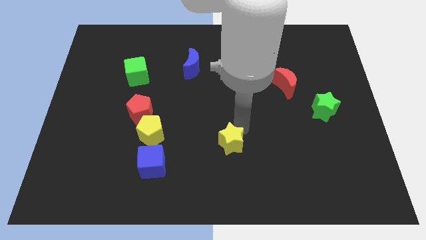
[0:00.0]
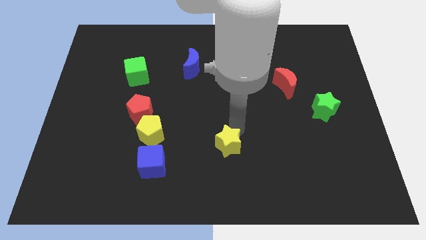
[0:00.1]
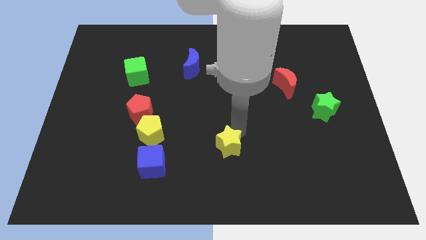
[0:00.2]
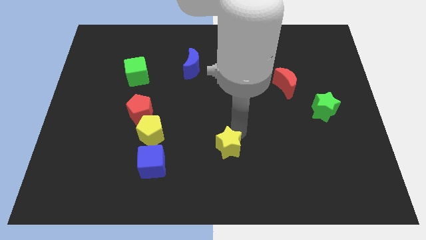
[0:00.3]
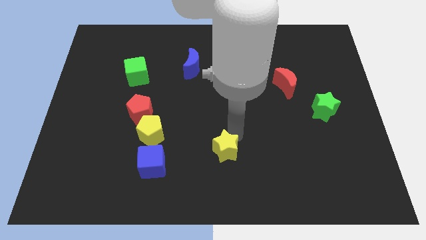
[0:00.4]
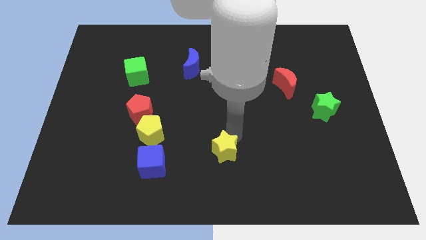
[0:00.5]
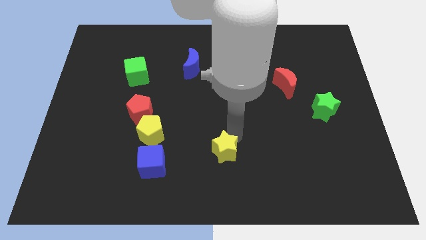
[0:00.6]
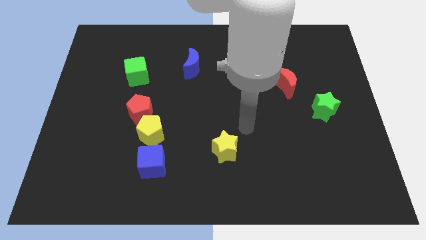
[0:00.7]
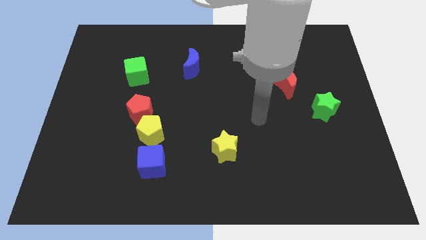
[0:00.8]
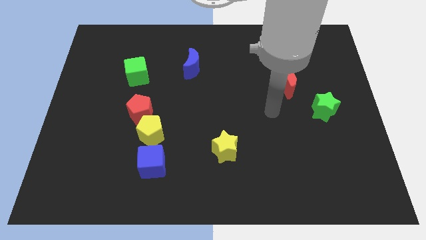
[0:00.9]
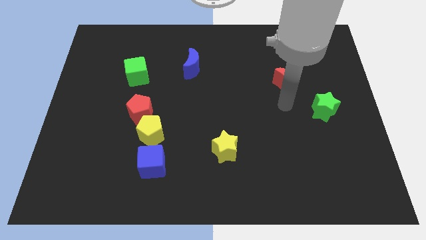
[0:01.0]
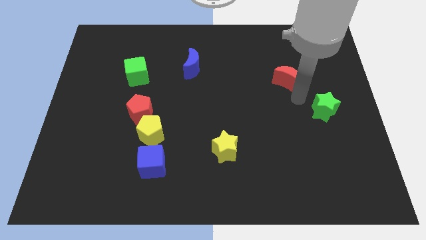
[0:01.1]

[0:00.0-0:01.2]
slightly push the yellow star downward

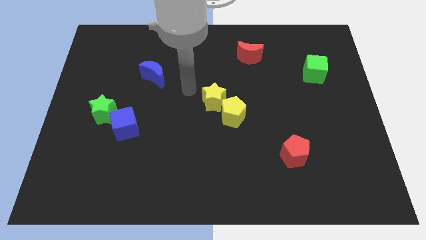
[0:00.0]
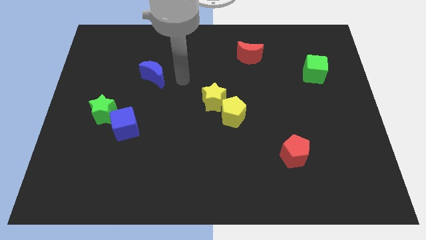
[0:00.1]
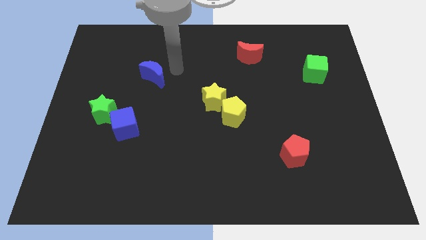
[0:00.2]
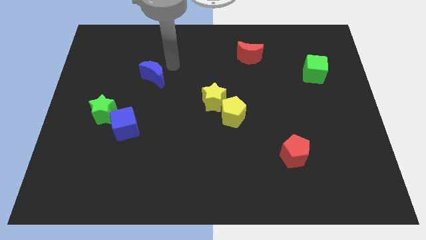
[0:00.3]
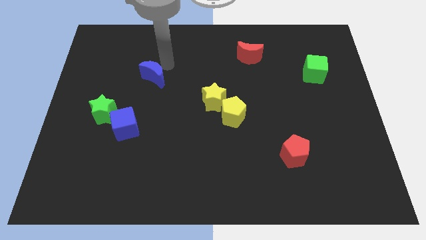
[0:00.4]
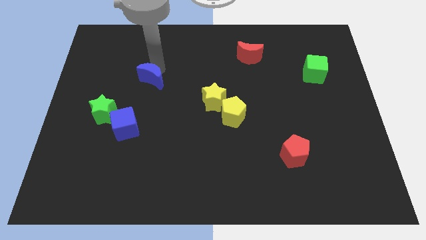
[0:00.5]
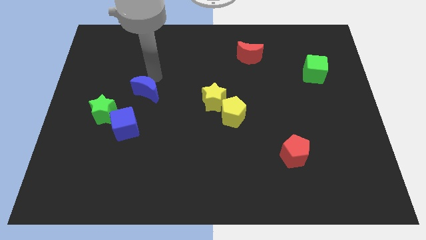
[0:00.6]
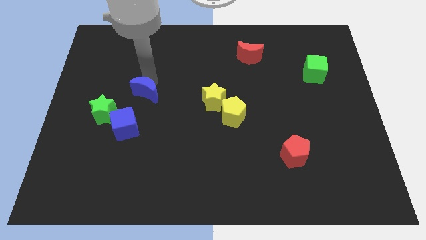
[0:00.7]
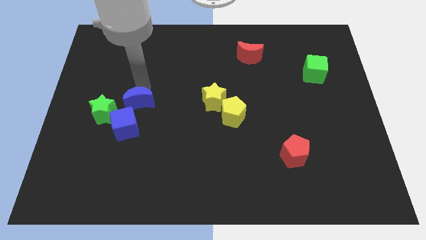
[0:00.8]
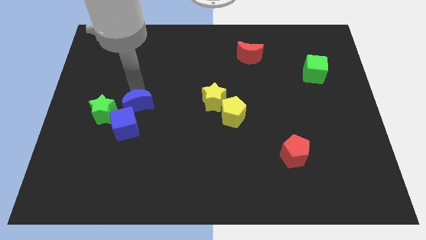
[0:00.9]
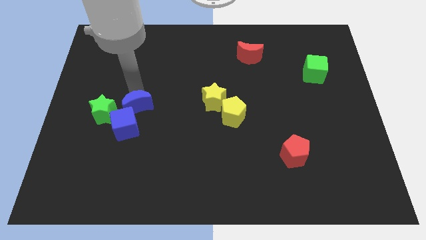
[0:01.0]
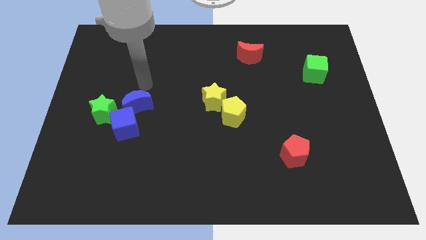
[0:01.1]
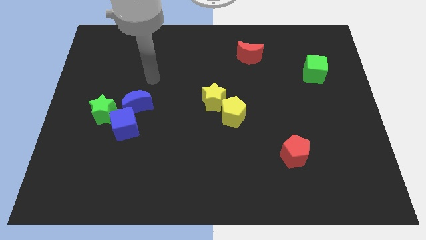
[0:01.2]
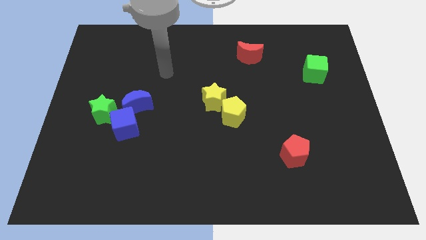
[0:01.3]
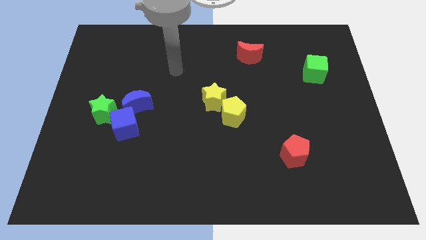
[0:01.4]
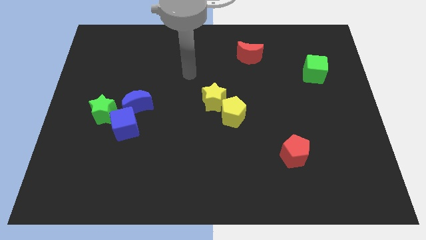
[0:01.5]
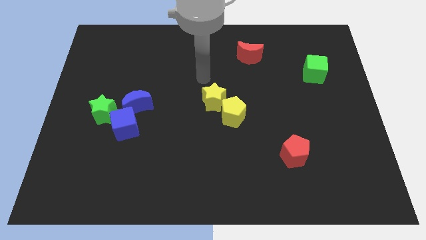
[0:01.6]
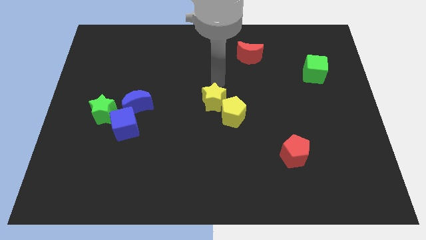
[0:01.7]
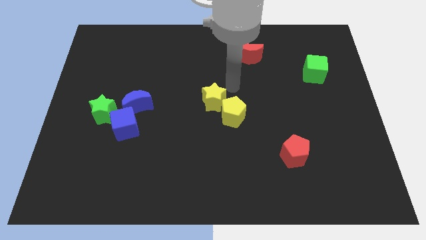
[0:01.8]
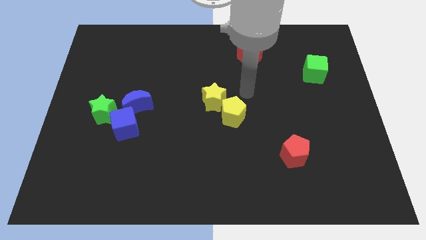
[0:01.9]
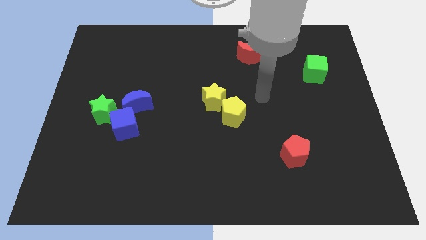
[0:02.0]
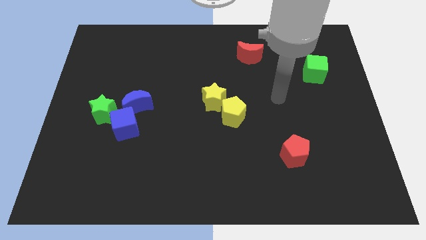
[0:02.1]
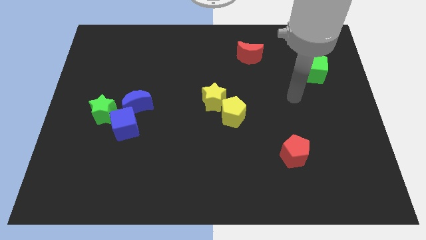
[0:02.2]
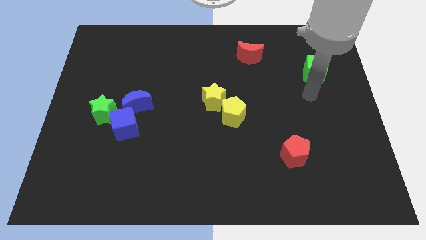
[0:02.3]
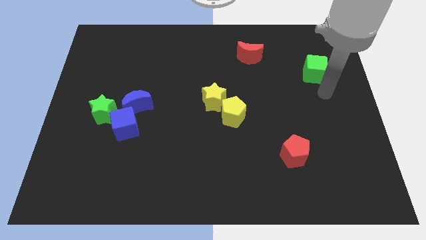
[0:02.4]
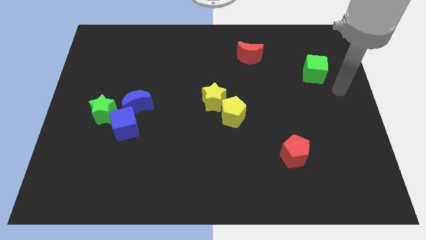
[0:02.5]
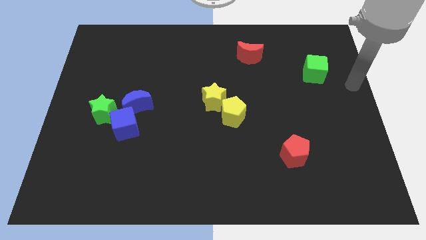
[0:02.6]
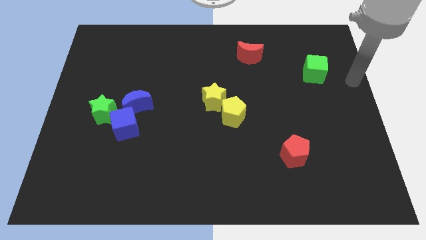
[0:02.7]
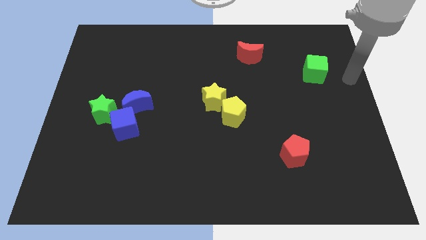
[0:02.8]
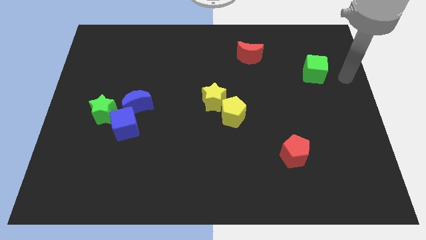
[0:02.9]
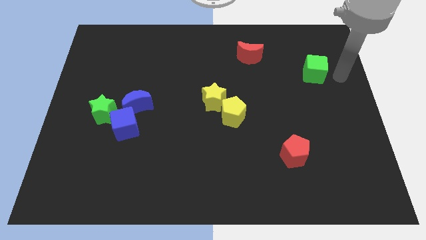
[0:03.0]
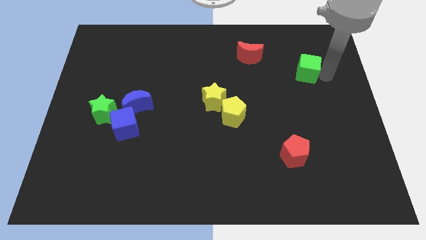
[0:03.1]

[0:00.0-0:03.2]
place your arm to the right of the green cube

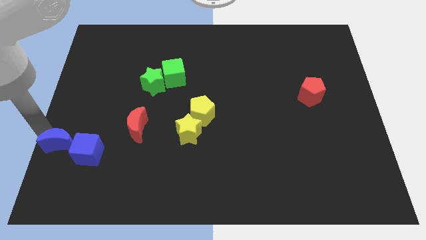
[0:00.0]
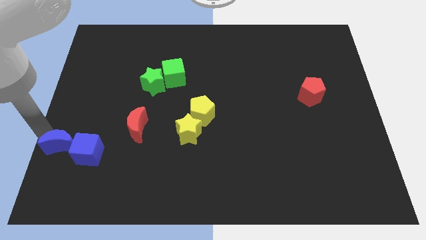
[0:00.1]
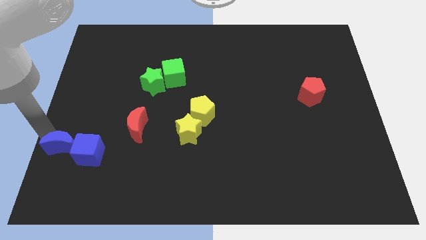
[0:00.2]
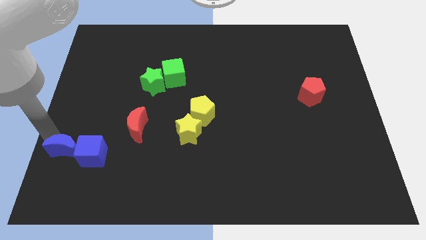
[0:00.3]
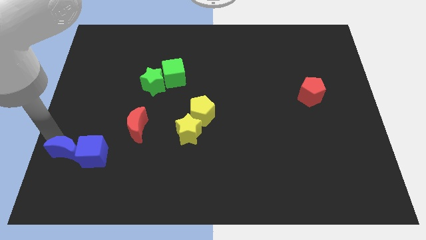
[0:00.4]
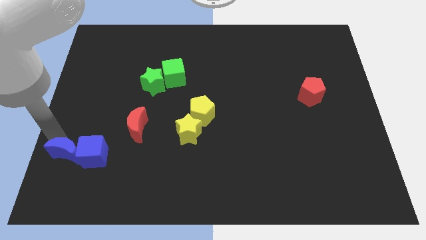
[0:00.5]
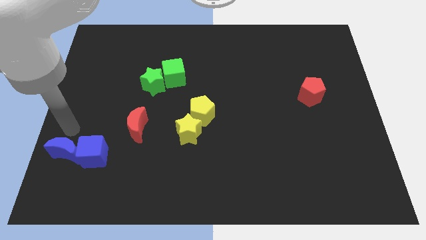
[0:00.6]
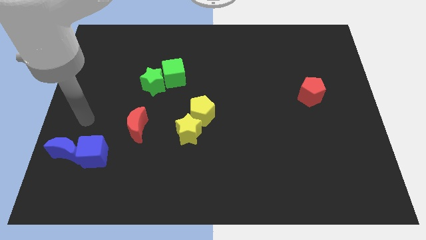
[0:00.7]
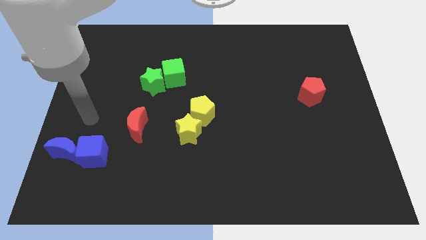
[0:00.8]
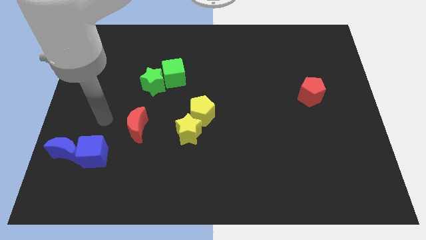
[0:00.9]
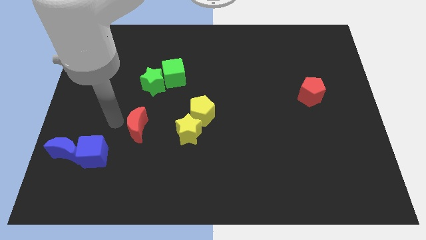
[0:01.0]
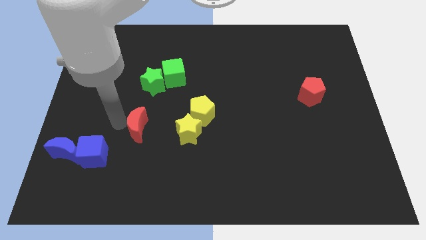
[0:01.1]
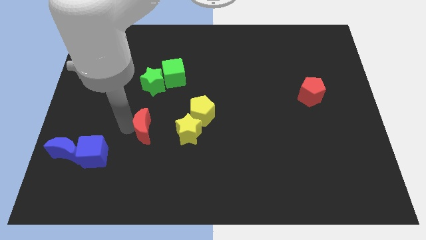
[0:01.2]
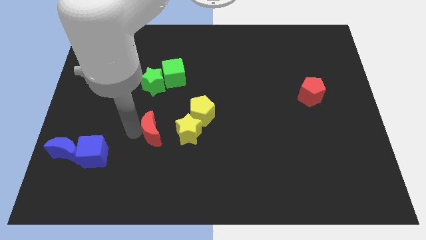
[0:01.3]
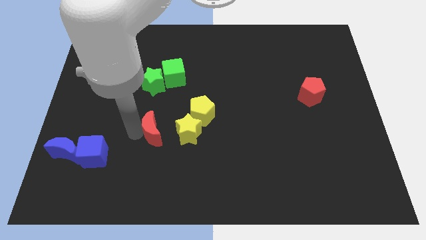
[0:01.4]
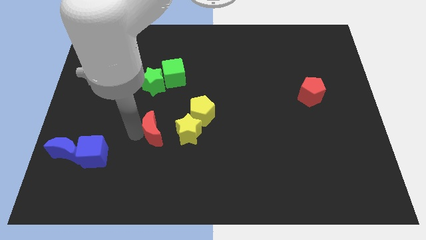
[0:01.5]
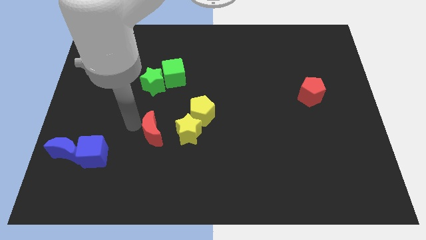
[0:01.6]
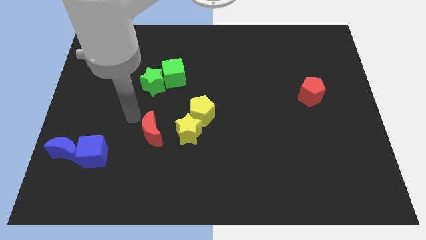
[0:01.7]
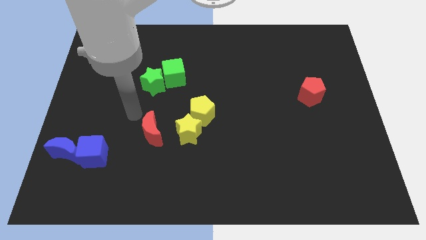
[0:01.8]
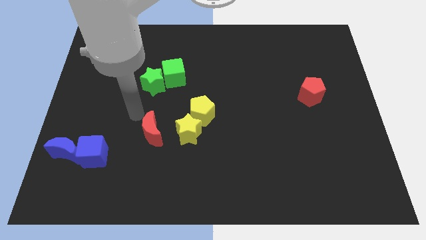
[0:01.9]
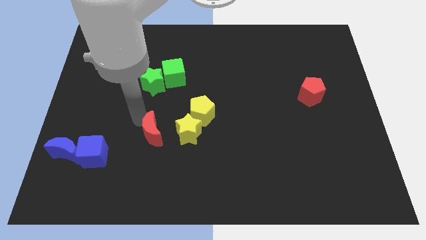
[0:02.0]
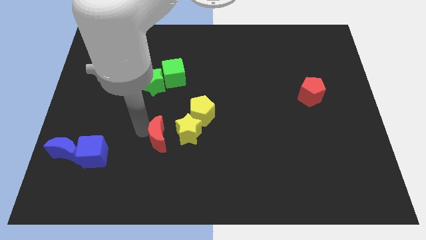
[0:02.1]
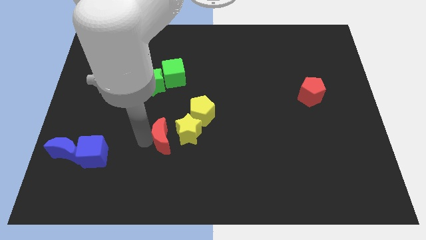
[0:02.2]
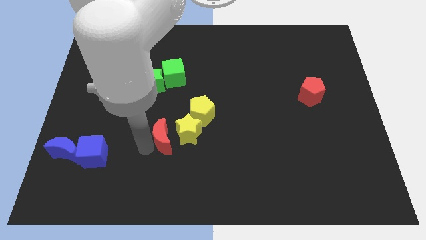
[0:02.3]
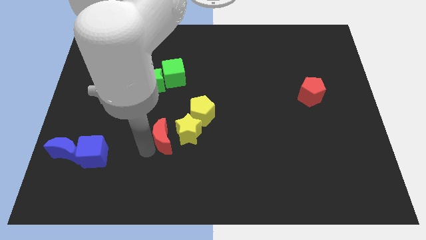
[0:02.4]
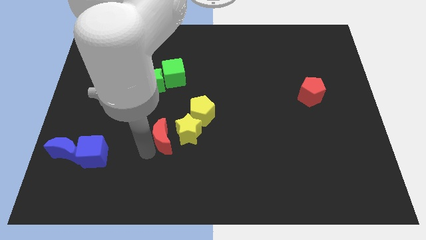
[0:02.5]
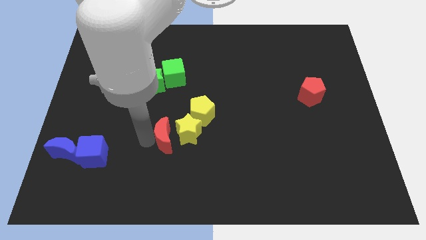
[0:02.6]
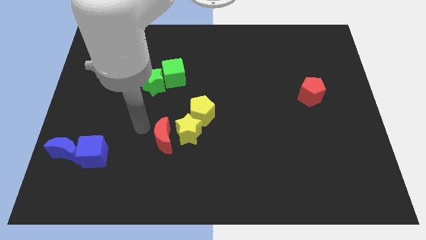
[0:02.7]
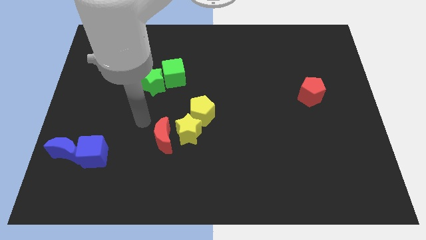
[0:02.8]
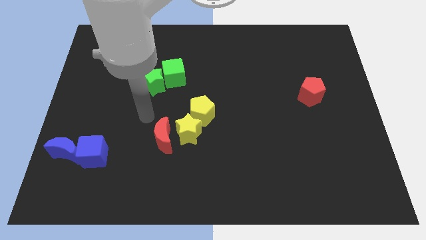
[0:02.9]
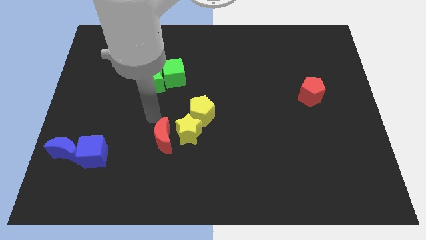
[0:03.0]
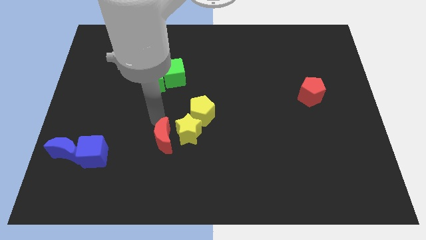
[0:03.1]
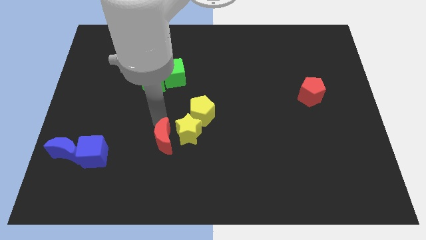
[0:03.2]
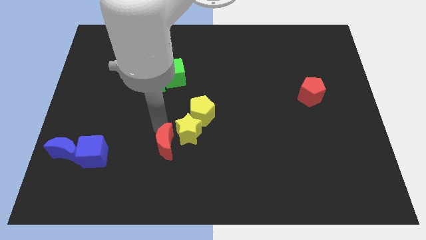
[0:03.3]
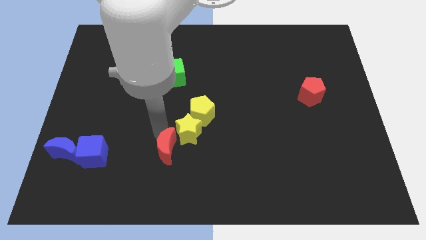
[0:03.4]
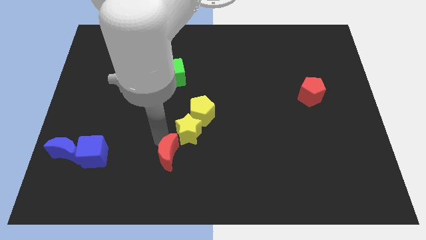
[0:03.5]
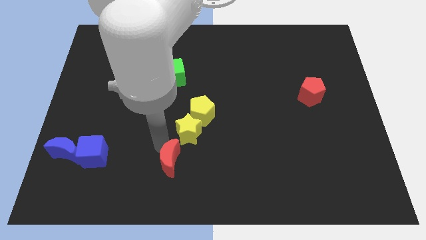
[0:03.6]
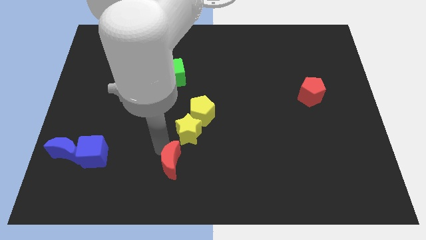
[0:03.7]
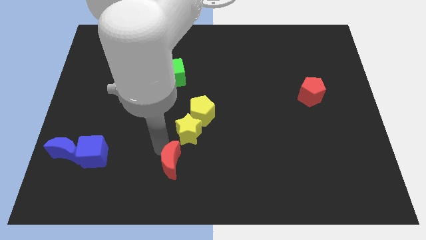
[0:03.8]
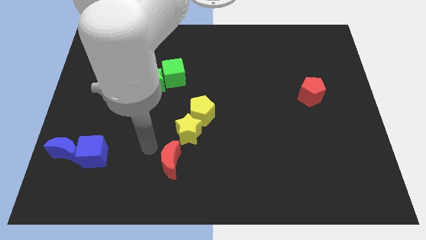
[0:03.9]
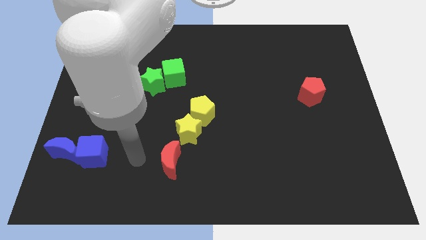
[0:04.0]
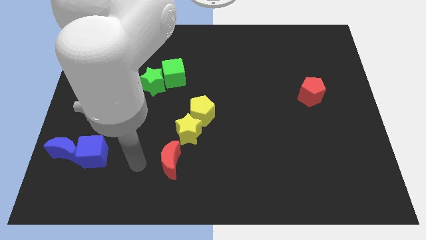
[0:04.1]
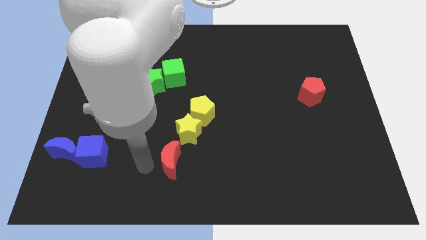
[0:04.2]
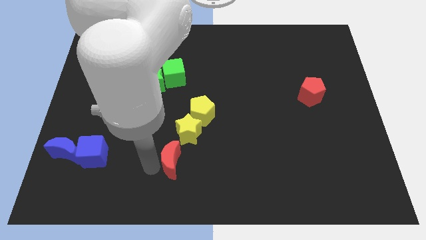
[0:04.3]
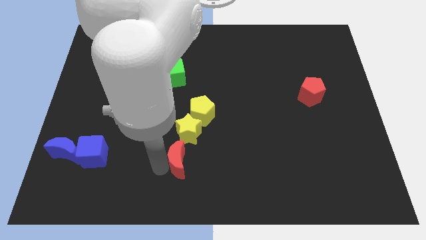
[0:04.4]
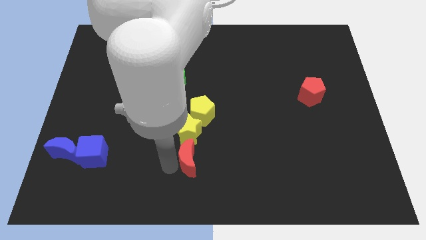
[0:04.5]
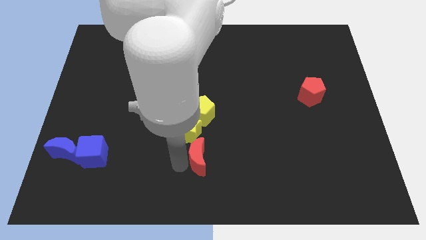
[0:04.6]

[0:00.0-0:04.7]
move the red crescent vertically bottom of the yellow star
